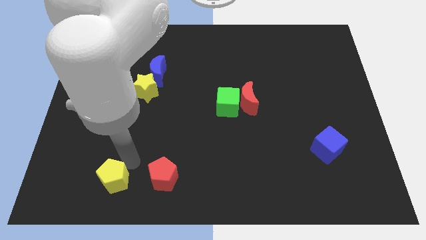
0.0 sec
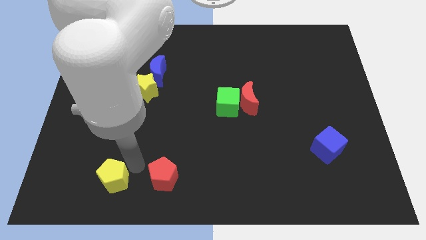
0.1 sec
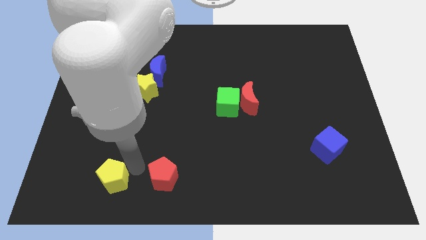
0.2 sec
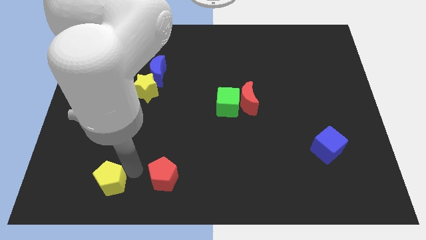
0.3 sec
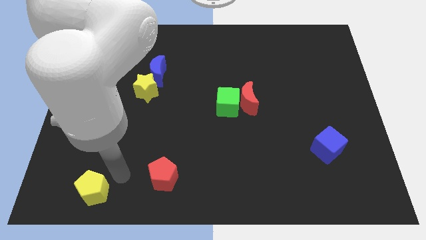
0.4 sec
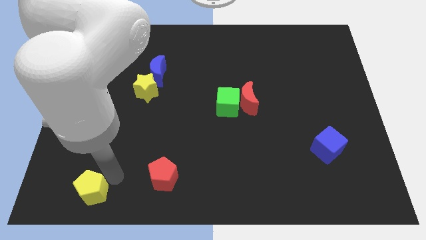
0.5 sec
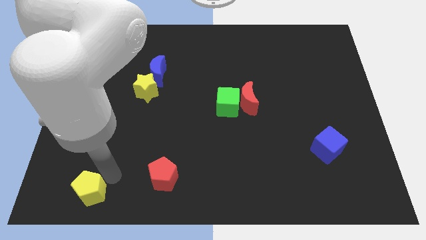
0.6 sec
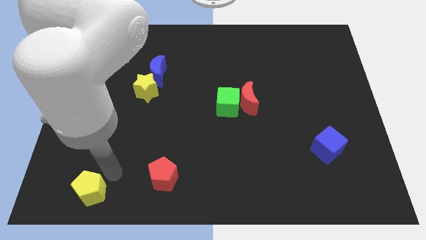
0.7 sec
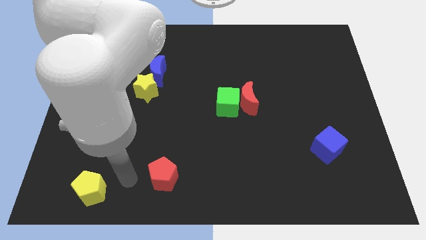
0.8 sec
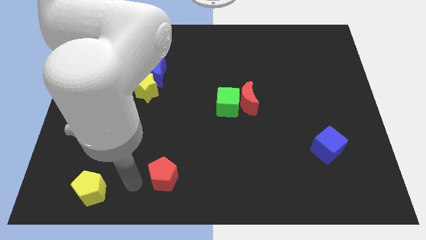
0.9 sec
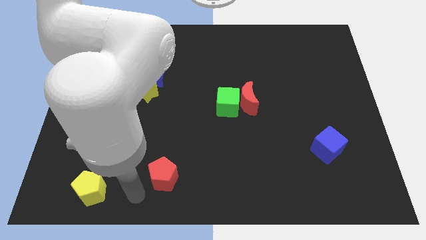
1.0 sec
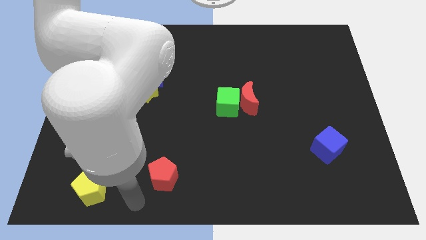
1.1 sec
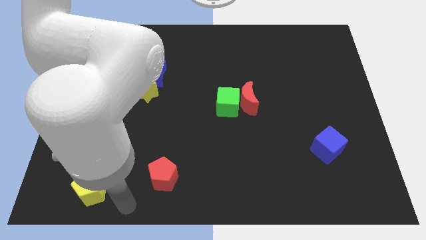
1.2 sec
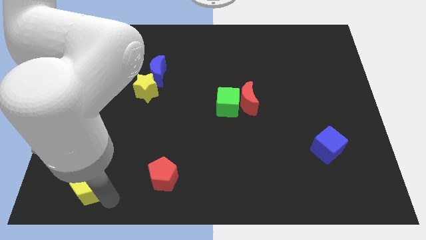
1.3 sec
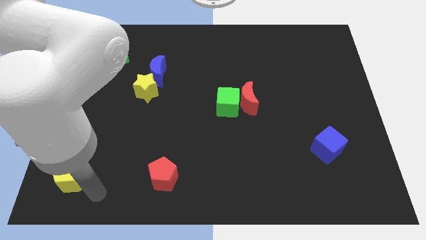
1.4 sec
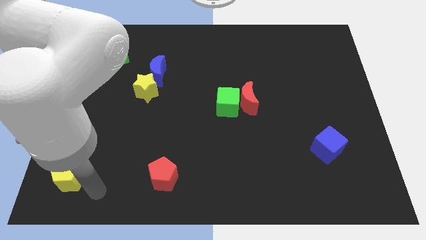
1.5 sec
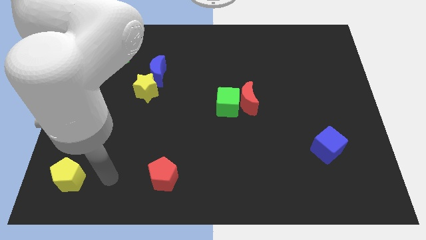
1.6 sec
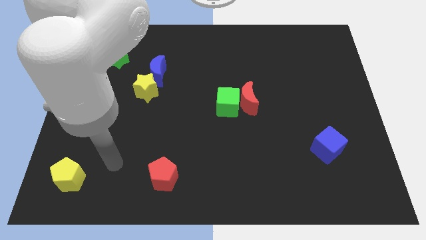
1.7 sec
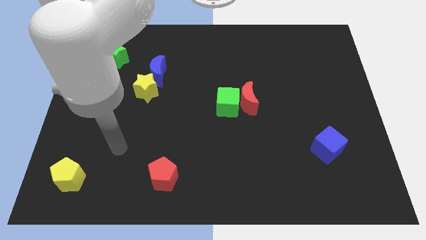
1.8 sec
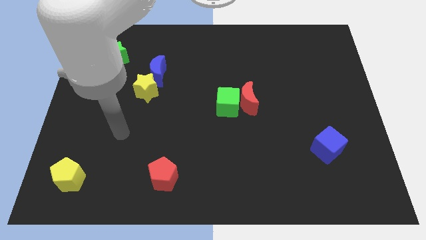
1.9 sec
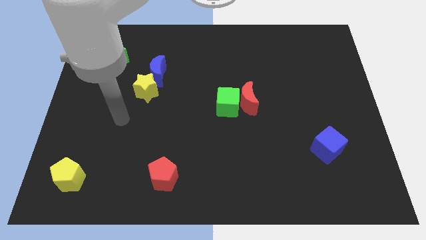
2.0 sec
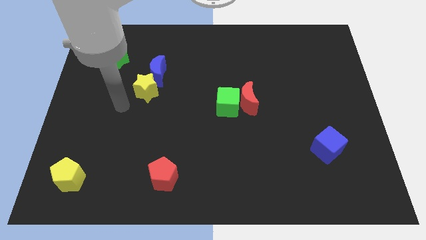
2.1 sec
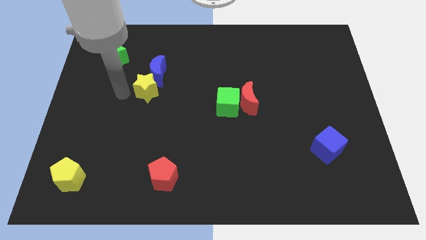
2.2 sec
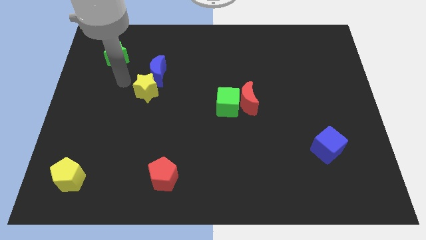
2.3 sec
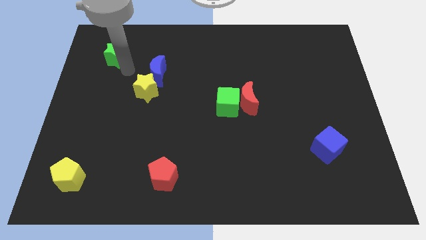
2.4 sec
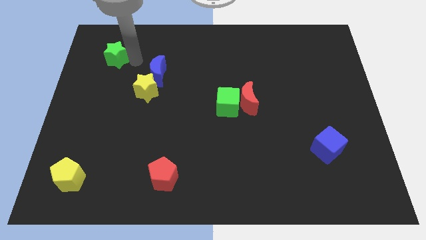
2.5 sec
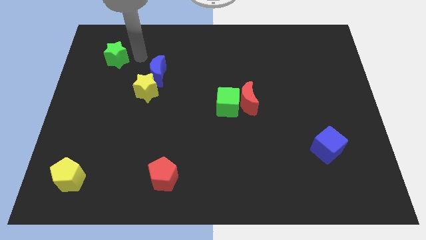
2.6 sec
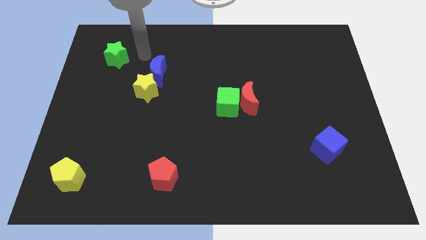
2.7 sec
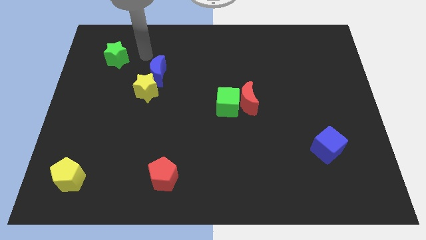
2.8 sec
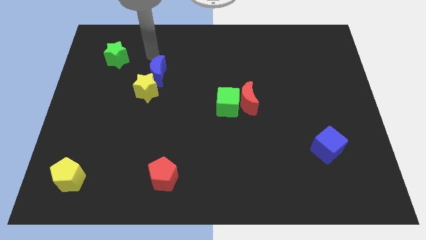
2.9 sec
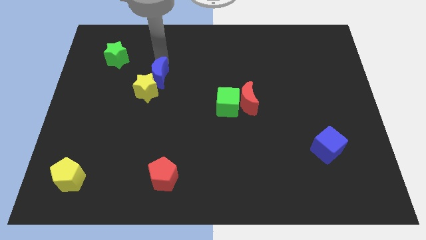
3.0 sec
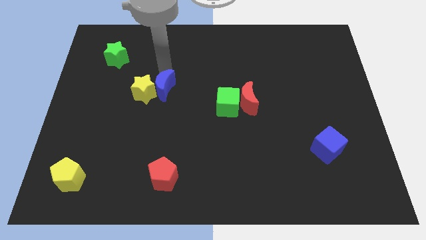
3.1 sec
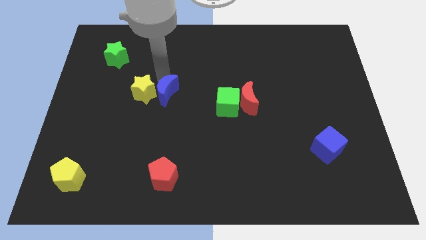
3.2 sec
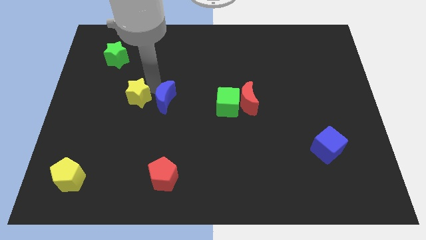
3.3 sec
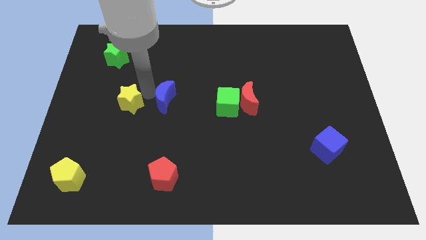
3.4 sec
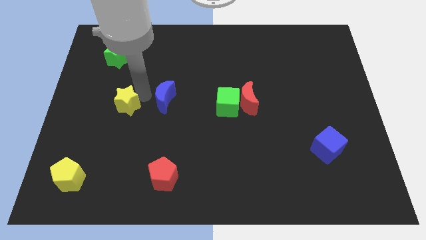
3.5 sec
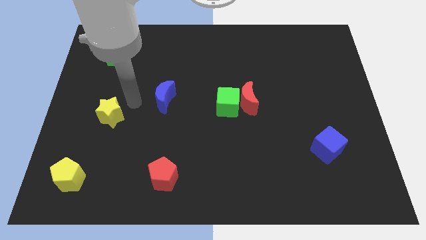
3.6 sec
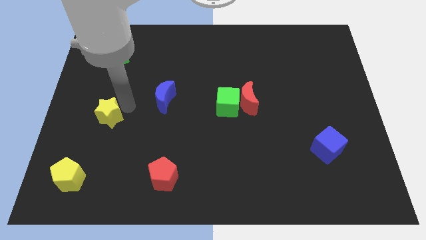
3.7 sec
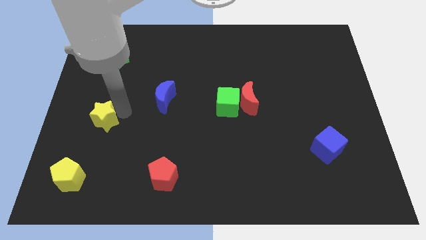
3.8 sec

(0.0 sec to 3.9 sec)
separate the yellow star from the blue moon

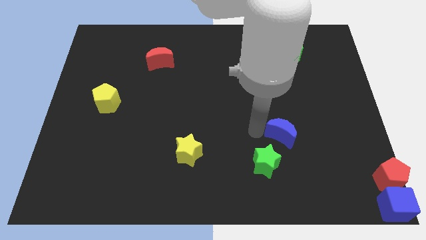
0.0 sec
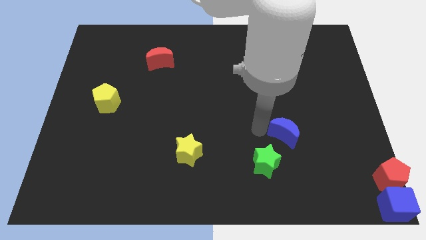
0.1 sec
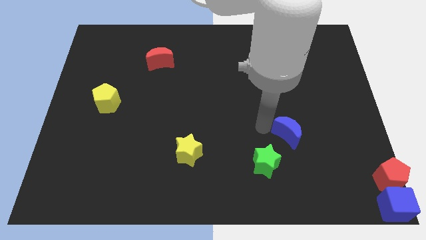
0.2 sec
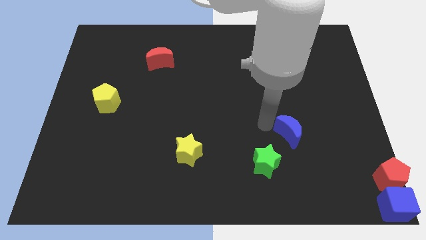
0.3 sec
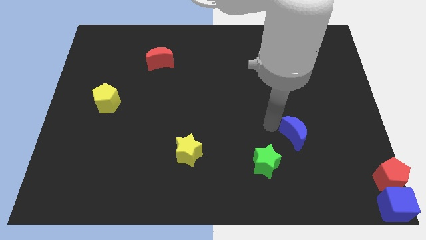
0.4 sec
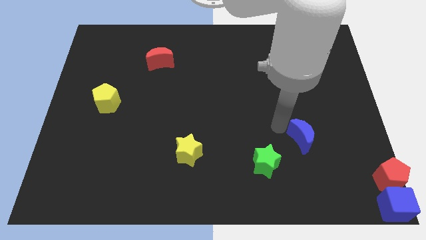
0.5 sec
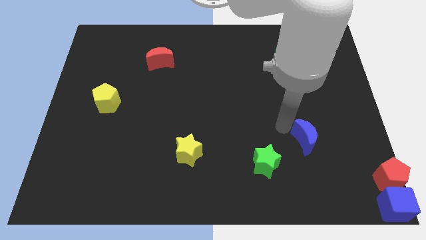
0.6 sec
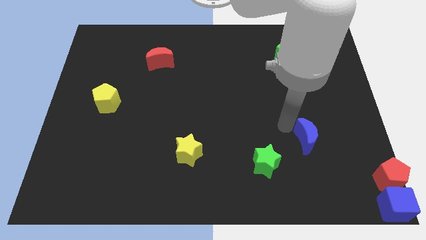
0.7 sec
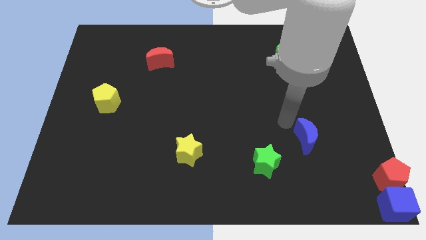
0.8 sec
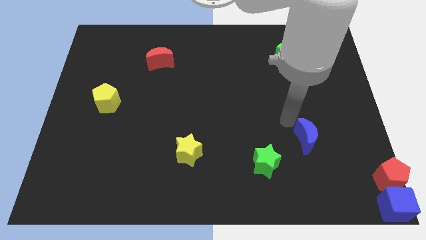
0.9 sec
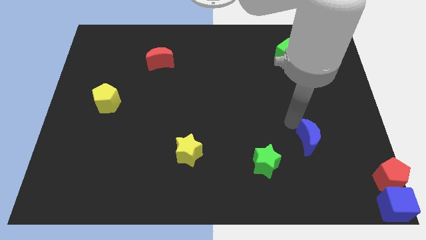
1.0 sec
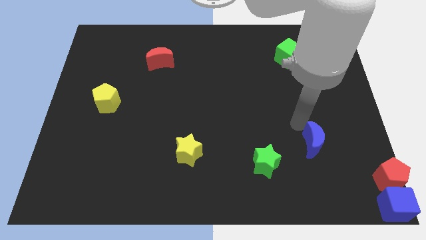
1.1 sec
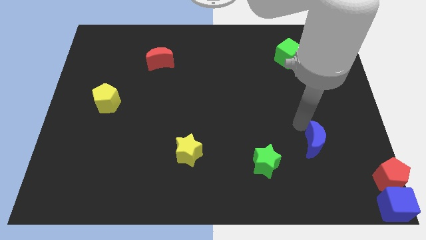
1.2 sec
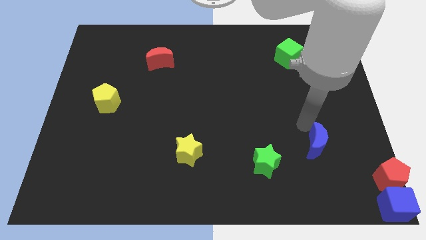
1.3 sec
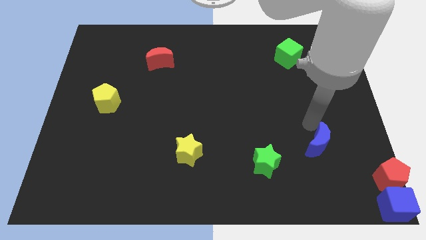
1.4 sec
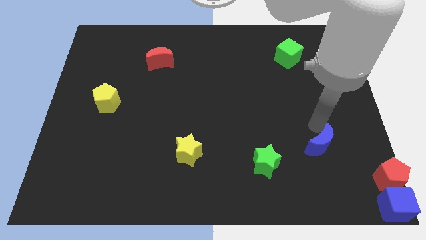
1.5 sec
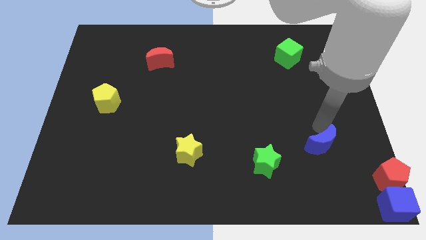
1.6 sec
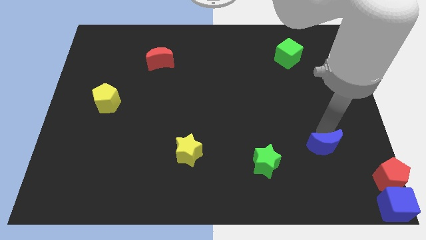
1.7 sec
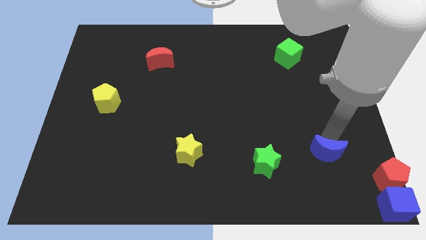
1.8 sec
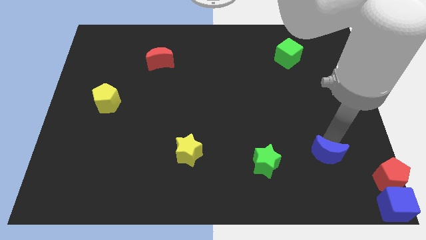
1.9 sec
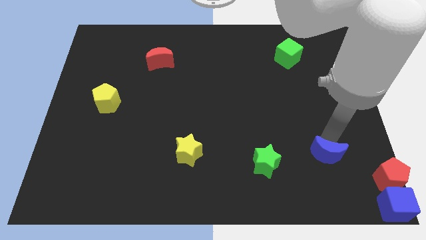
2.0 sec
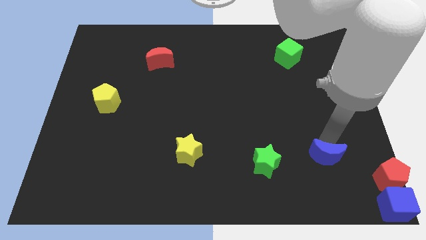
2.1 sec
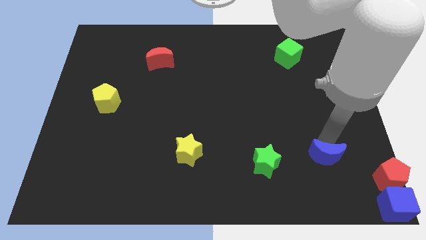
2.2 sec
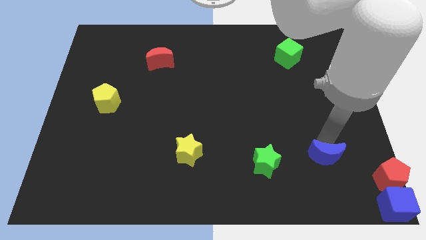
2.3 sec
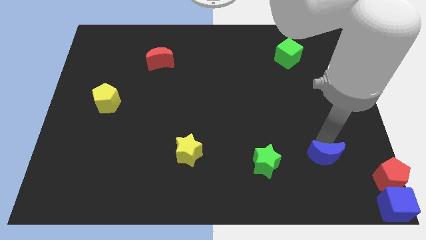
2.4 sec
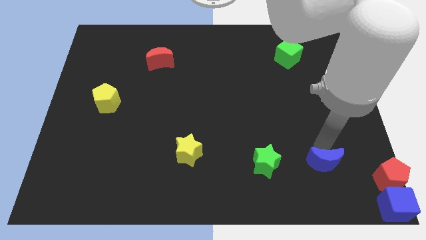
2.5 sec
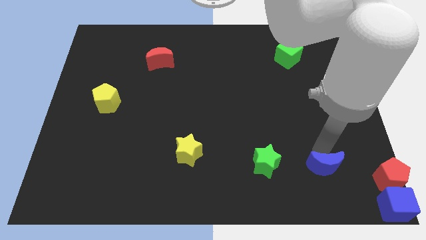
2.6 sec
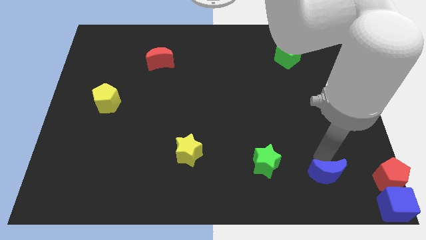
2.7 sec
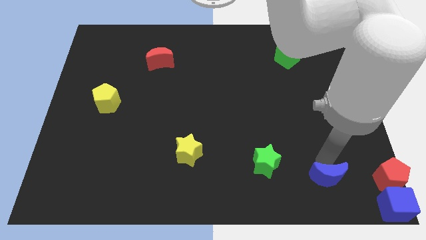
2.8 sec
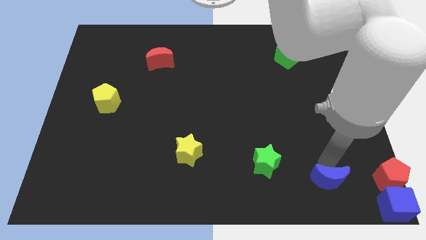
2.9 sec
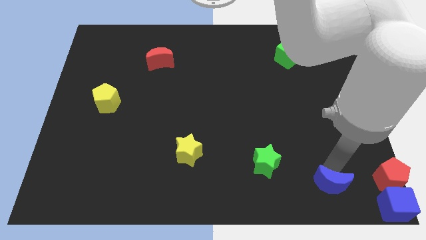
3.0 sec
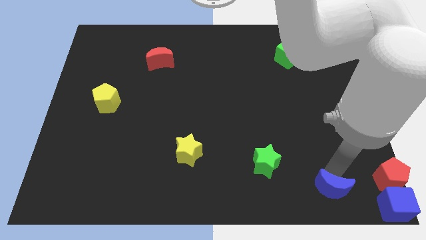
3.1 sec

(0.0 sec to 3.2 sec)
place the blue crescent to the left side of red pentagon

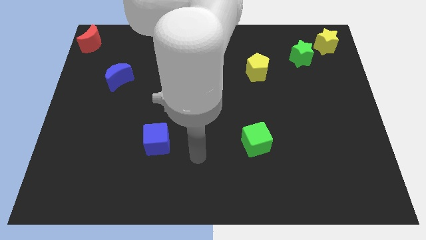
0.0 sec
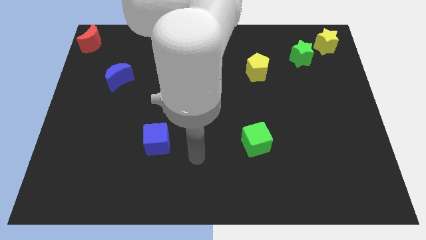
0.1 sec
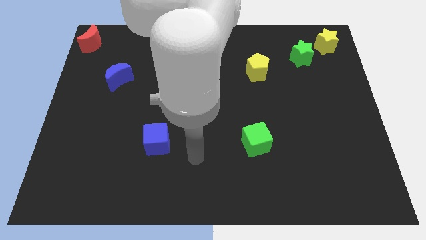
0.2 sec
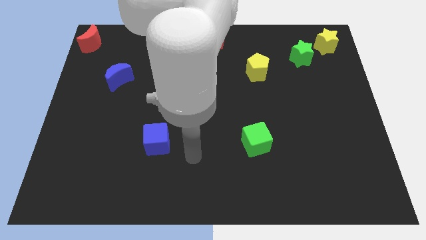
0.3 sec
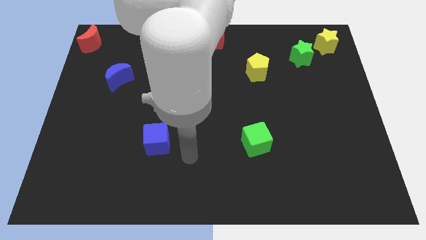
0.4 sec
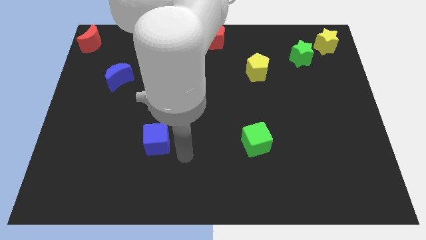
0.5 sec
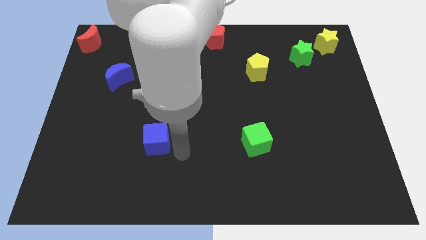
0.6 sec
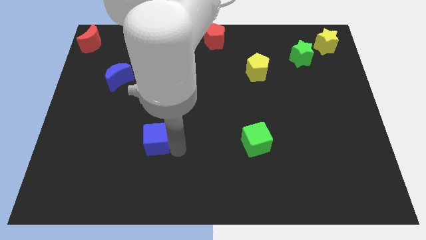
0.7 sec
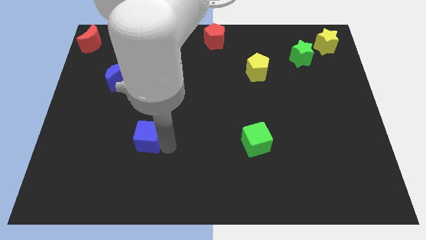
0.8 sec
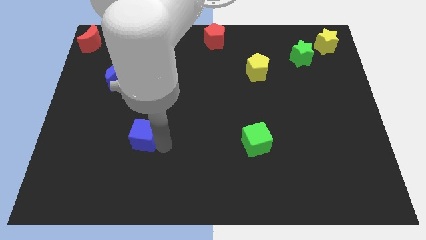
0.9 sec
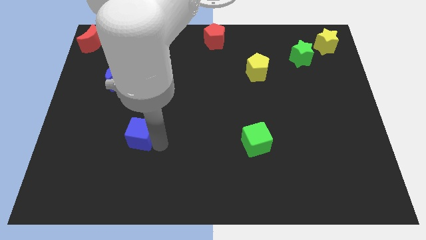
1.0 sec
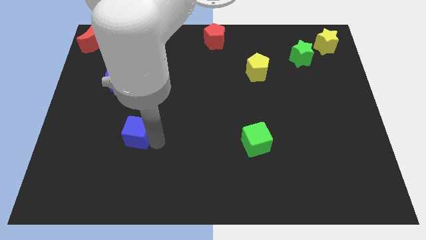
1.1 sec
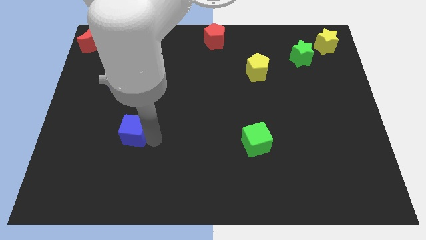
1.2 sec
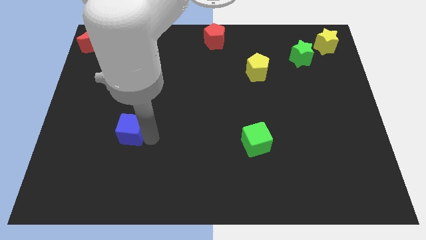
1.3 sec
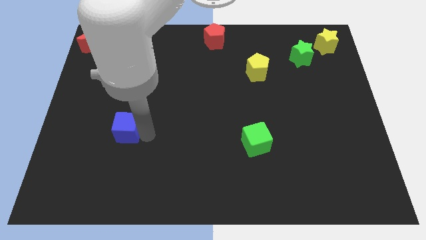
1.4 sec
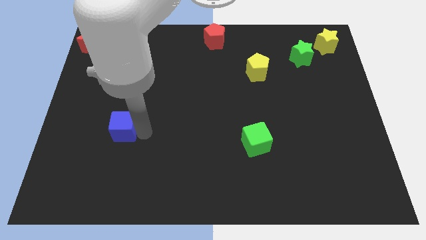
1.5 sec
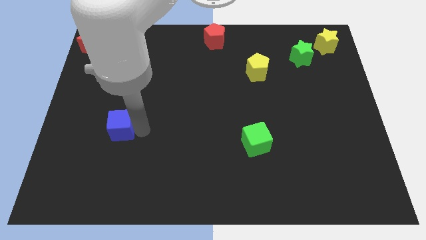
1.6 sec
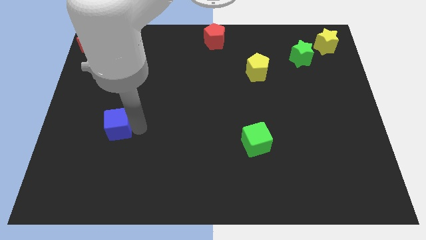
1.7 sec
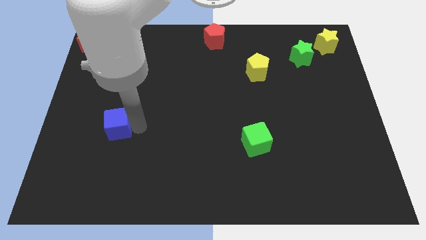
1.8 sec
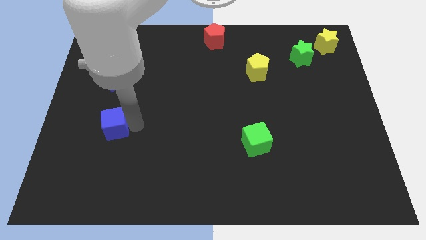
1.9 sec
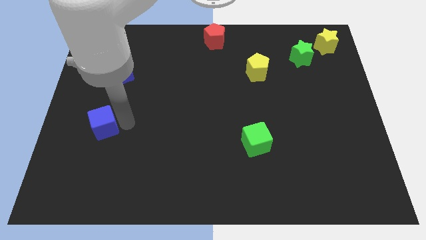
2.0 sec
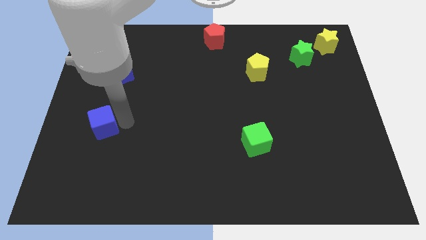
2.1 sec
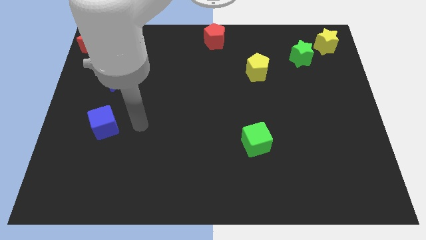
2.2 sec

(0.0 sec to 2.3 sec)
push the blue cube towards the left side of the board
